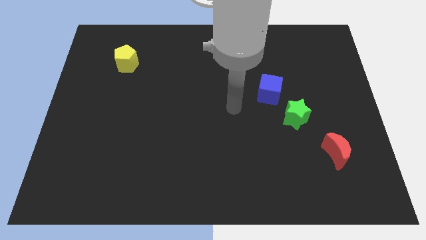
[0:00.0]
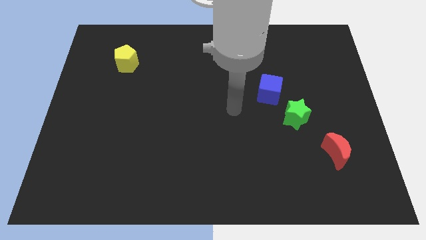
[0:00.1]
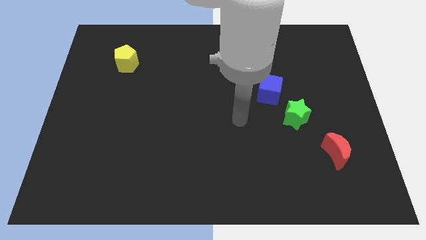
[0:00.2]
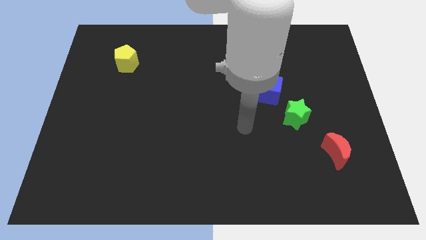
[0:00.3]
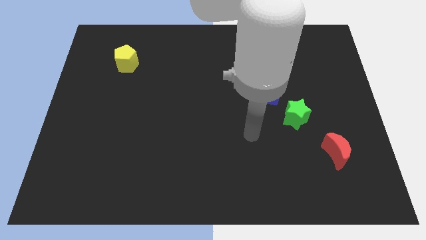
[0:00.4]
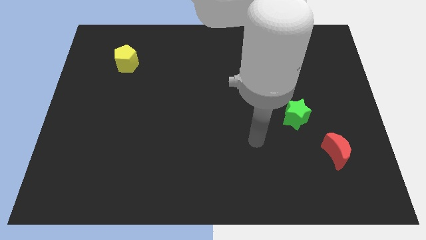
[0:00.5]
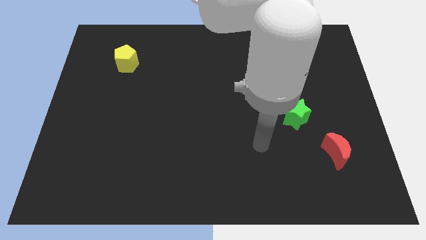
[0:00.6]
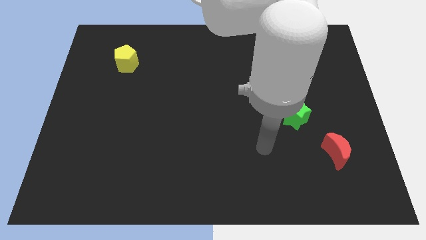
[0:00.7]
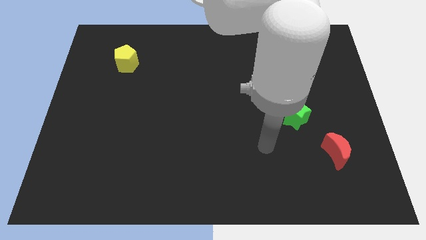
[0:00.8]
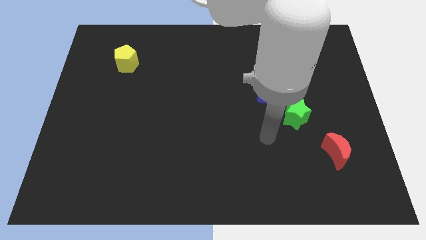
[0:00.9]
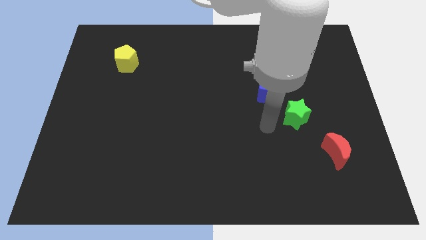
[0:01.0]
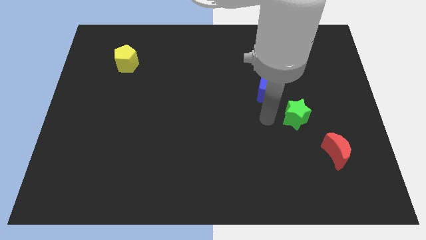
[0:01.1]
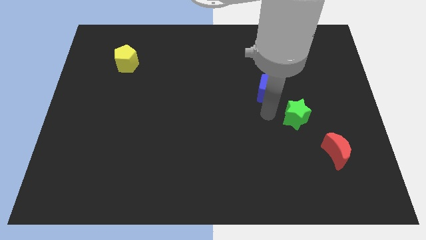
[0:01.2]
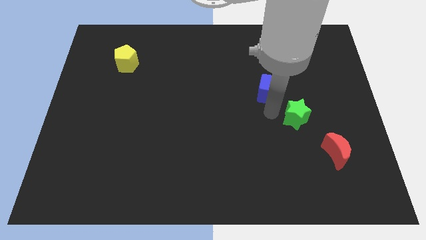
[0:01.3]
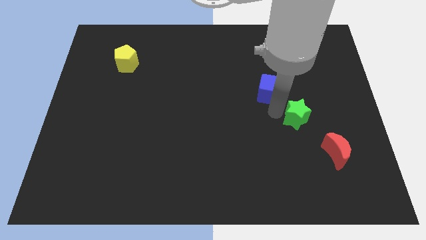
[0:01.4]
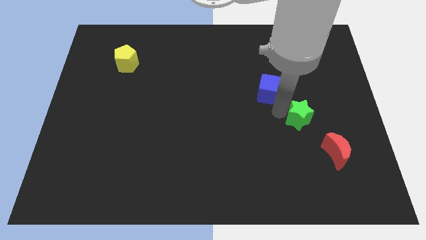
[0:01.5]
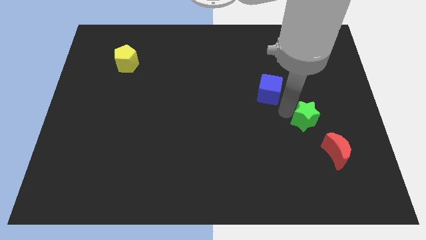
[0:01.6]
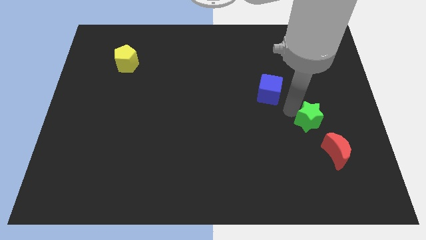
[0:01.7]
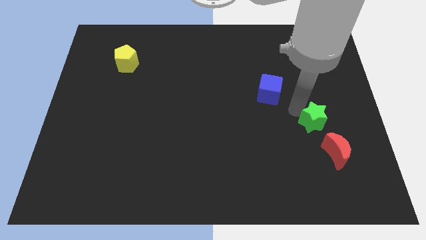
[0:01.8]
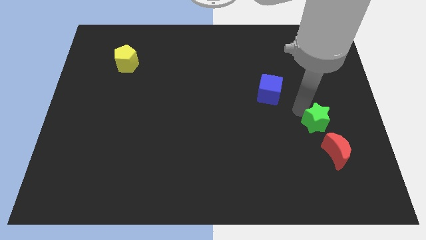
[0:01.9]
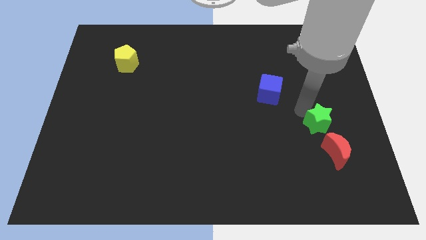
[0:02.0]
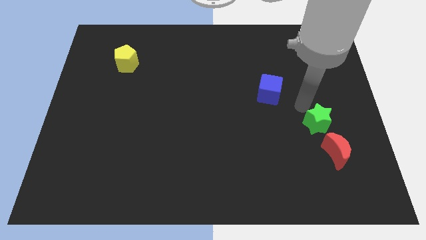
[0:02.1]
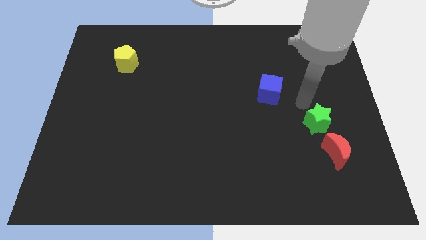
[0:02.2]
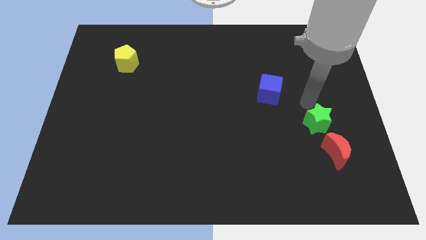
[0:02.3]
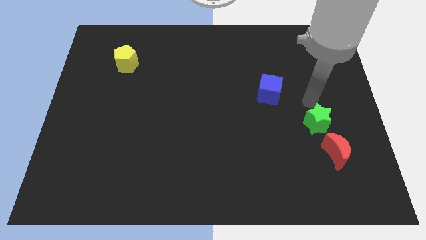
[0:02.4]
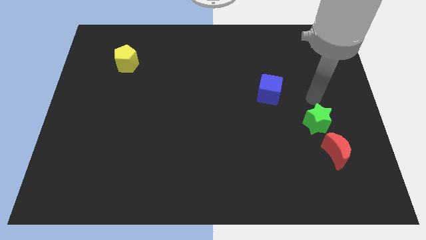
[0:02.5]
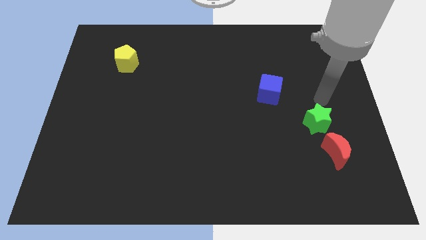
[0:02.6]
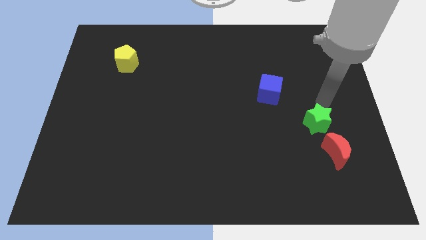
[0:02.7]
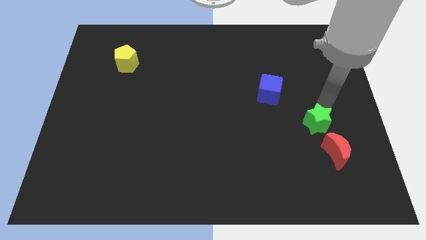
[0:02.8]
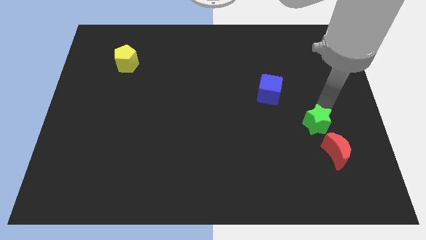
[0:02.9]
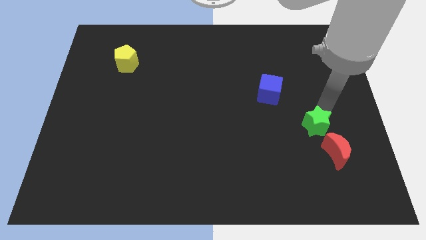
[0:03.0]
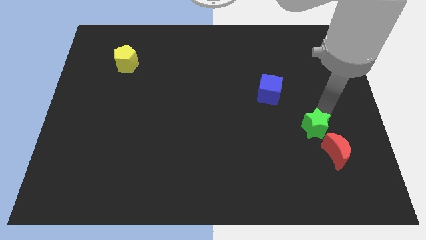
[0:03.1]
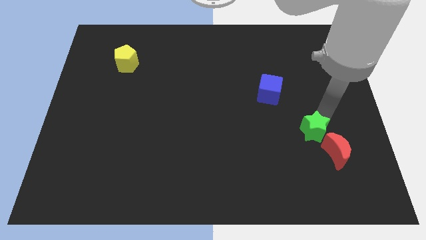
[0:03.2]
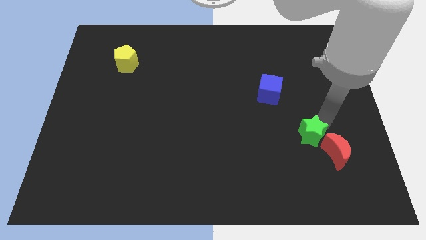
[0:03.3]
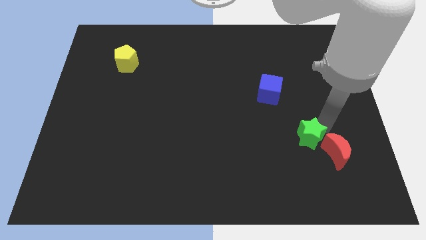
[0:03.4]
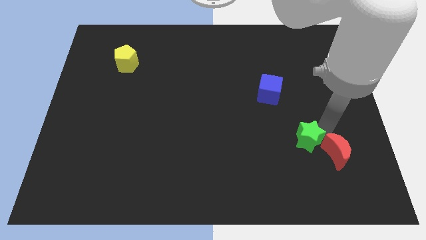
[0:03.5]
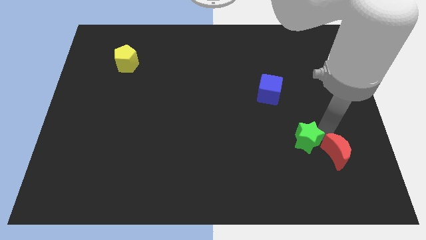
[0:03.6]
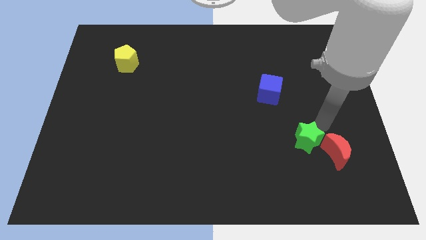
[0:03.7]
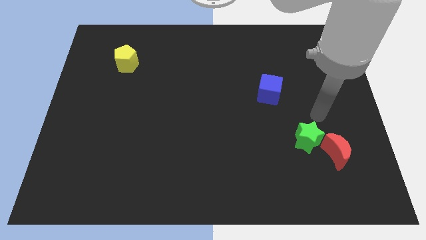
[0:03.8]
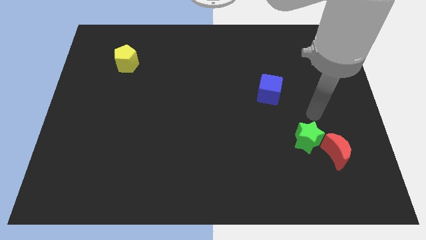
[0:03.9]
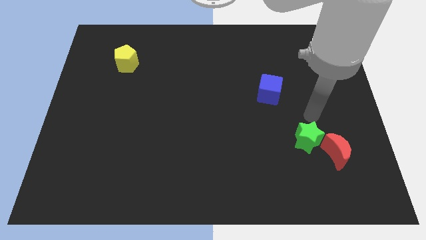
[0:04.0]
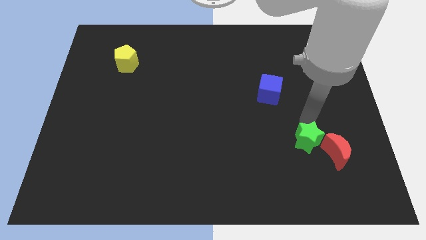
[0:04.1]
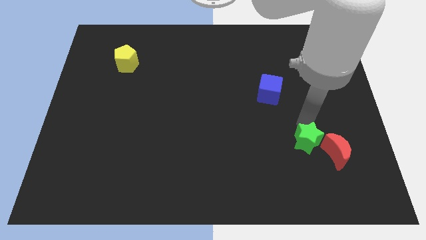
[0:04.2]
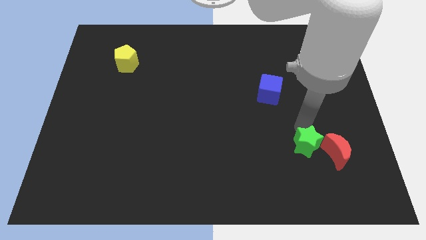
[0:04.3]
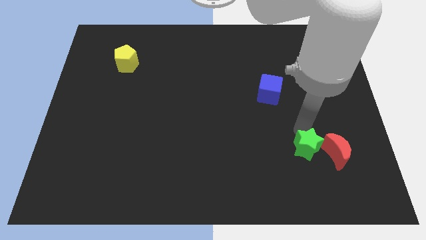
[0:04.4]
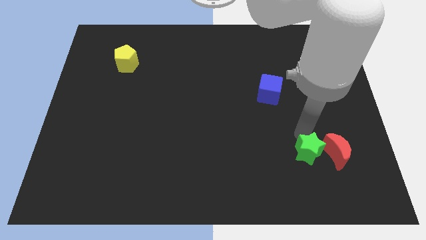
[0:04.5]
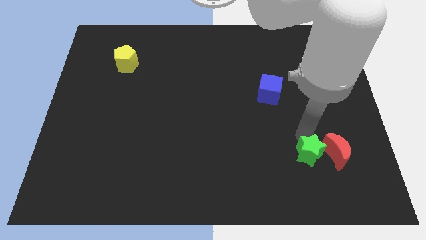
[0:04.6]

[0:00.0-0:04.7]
slide the star to the moon

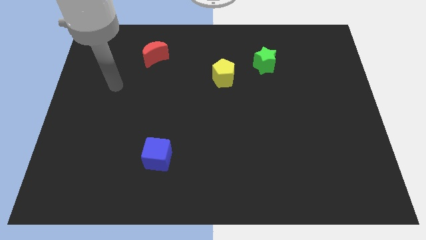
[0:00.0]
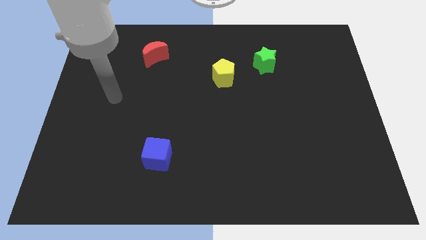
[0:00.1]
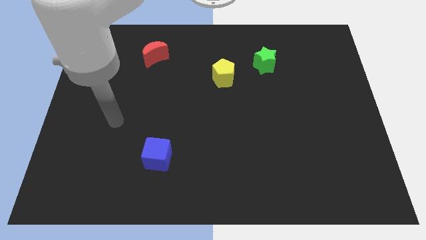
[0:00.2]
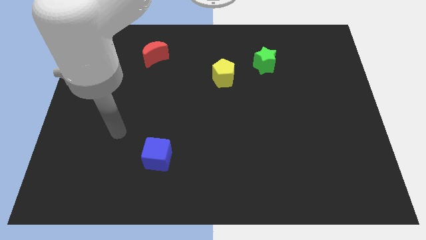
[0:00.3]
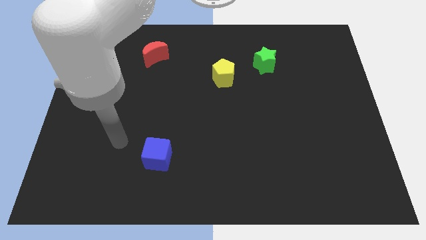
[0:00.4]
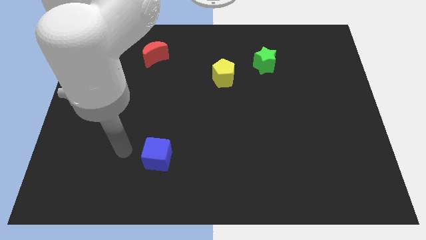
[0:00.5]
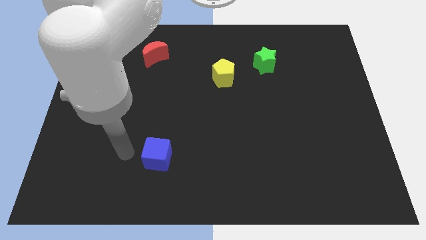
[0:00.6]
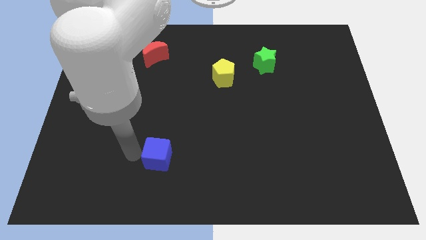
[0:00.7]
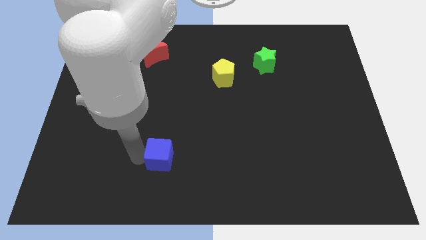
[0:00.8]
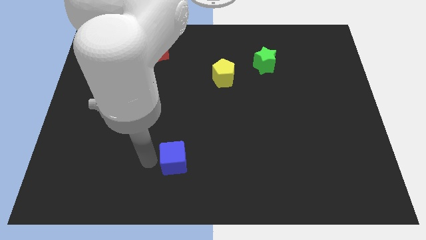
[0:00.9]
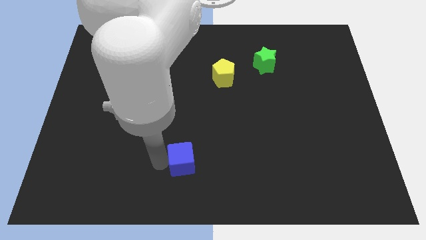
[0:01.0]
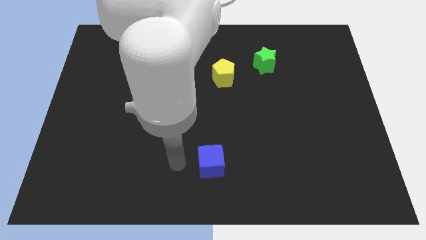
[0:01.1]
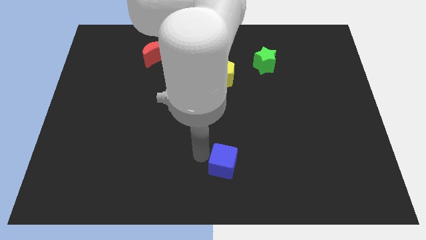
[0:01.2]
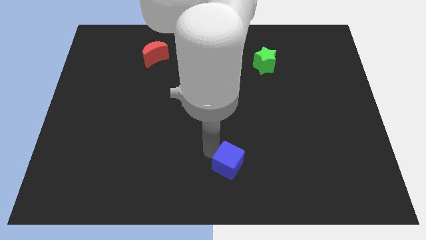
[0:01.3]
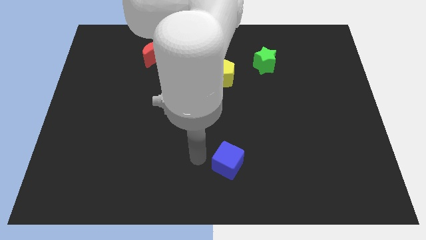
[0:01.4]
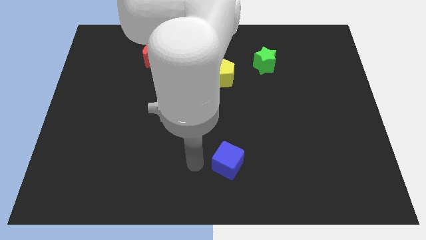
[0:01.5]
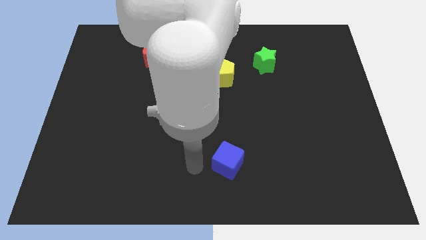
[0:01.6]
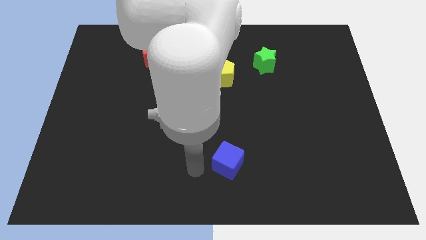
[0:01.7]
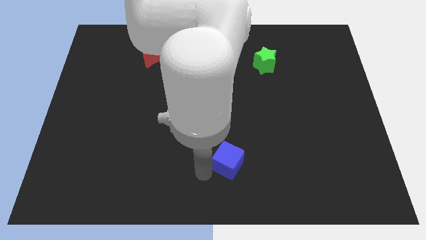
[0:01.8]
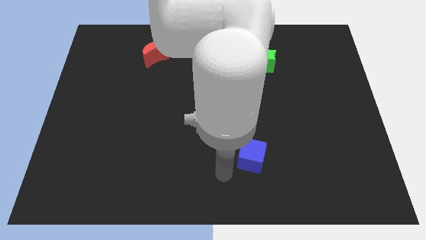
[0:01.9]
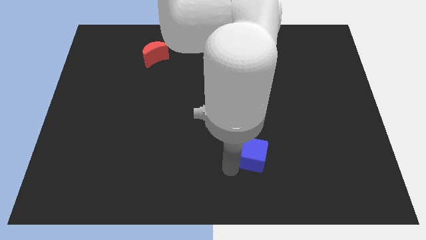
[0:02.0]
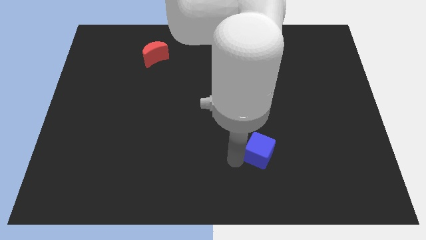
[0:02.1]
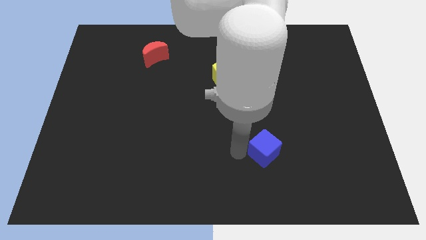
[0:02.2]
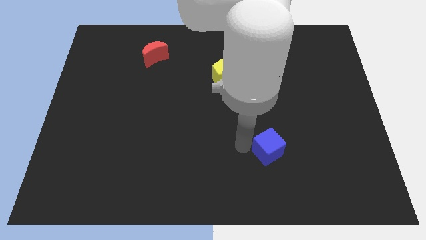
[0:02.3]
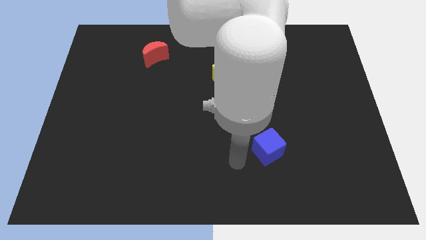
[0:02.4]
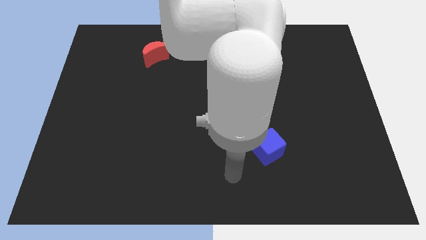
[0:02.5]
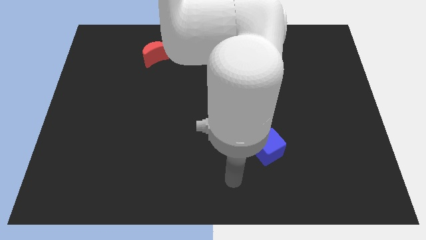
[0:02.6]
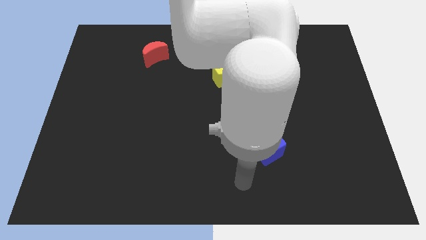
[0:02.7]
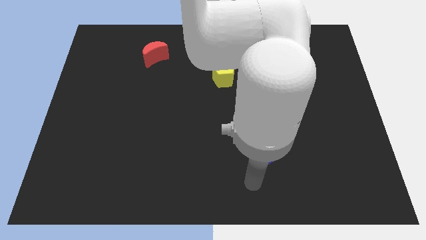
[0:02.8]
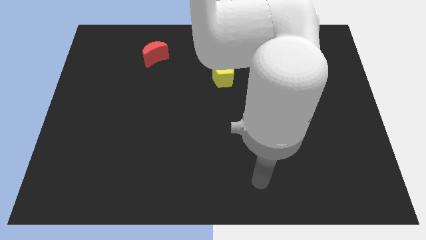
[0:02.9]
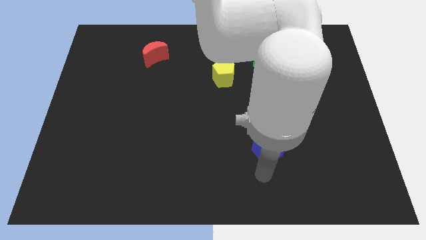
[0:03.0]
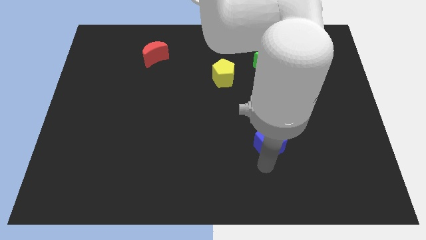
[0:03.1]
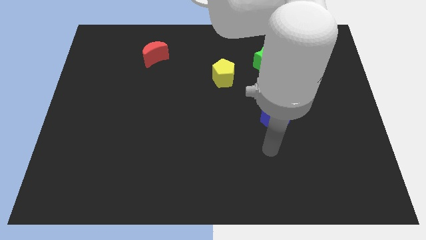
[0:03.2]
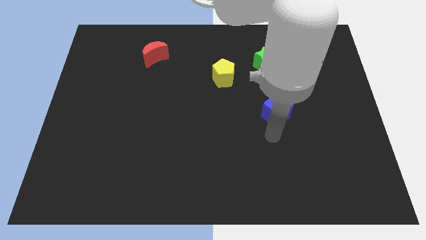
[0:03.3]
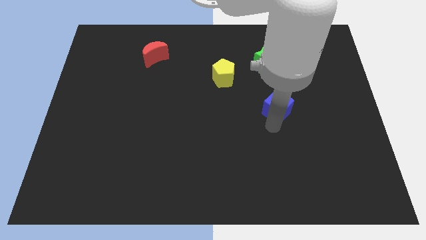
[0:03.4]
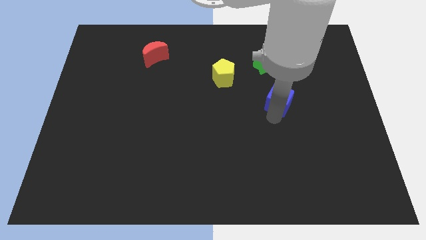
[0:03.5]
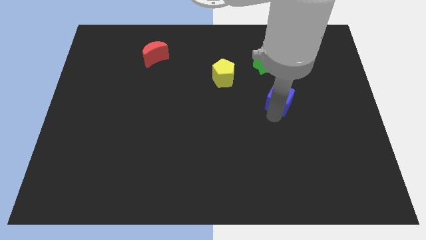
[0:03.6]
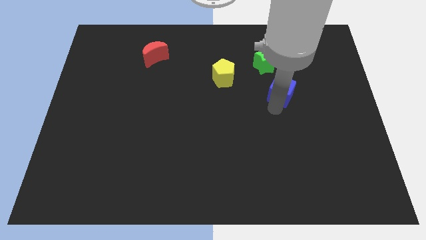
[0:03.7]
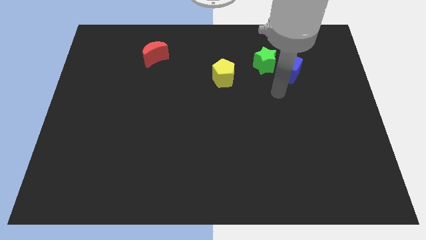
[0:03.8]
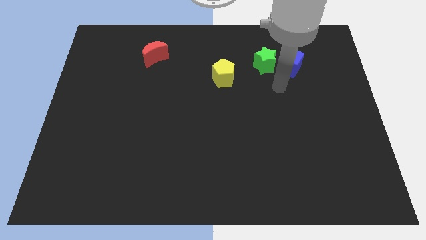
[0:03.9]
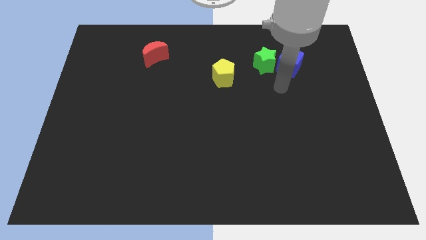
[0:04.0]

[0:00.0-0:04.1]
slide the cube next to the star
